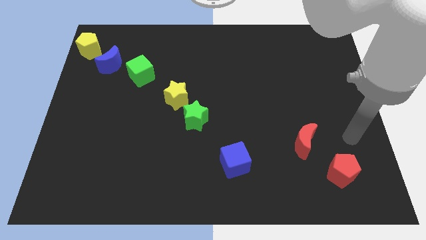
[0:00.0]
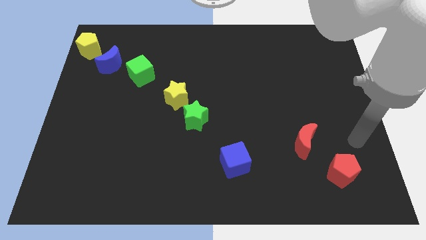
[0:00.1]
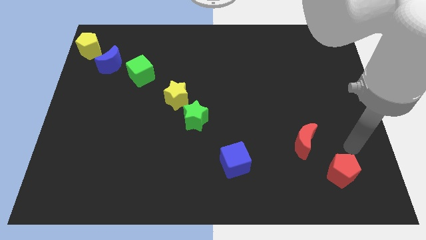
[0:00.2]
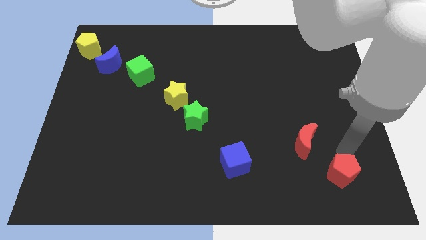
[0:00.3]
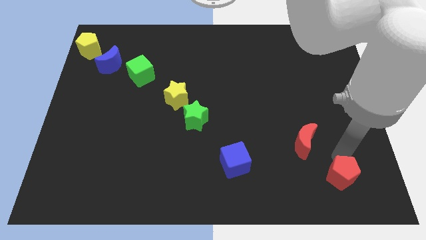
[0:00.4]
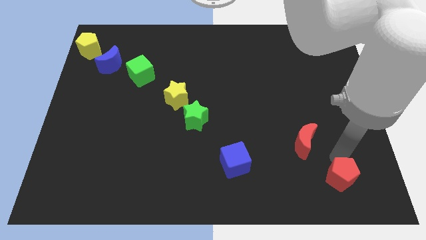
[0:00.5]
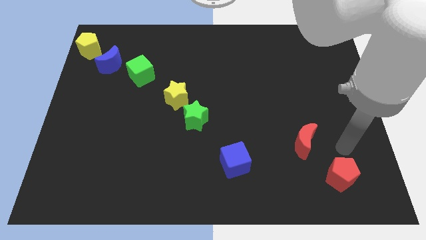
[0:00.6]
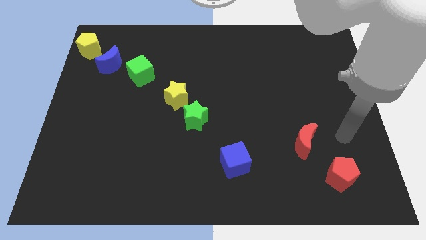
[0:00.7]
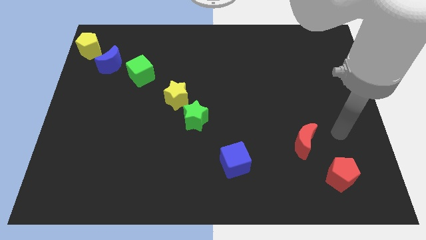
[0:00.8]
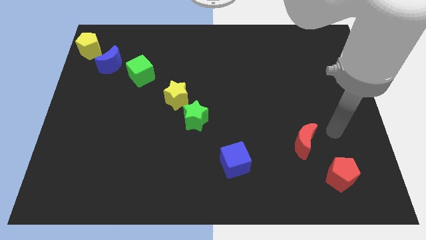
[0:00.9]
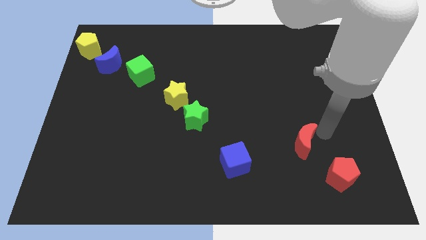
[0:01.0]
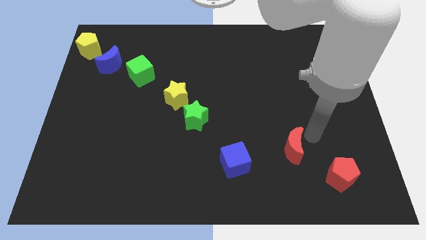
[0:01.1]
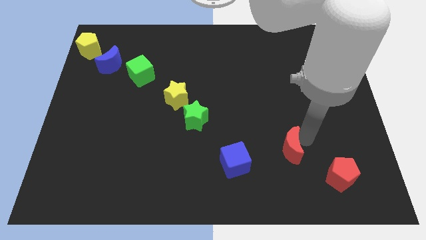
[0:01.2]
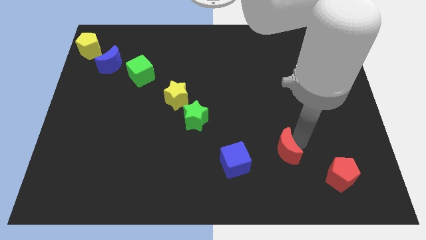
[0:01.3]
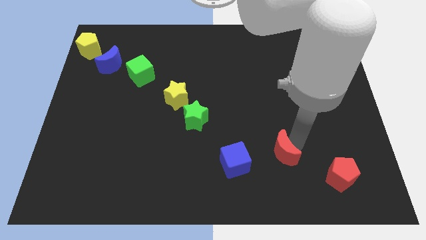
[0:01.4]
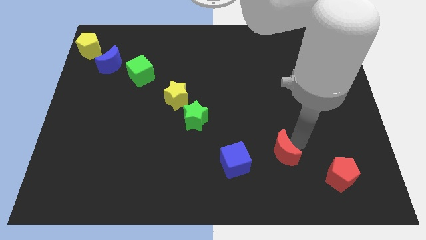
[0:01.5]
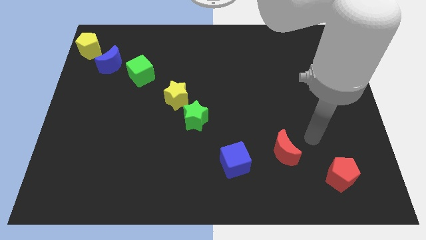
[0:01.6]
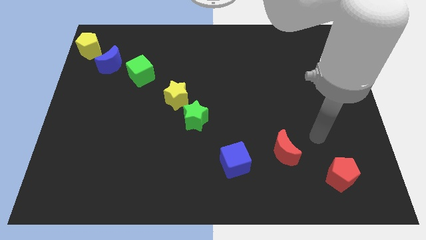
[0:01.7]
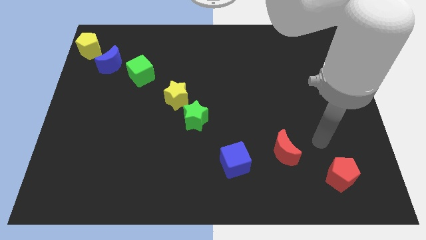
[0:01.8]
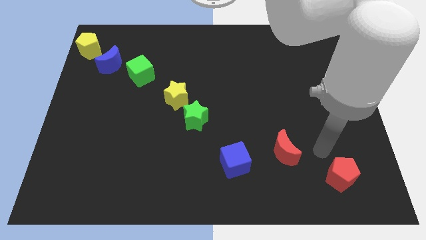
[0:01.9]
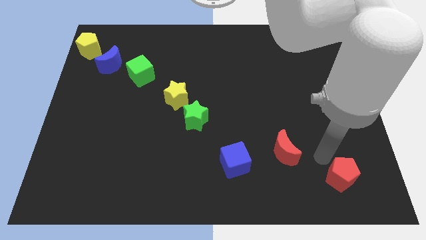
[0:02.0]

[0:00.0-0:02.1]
move the red moon right to the blue cube

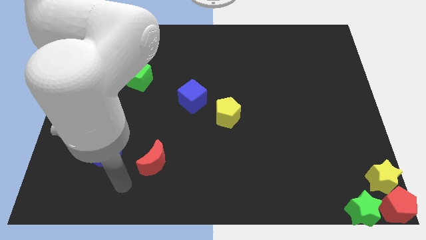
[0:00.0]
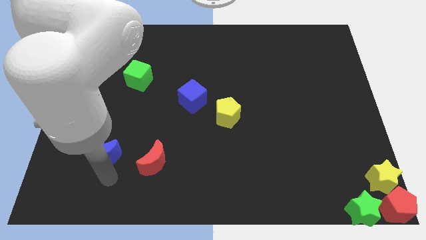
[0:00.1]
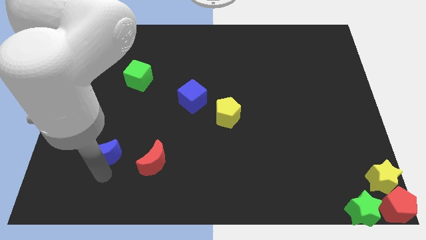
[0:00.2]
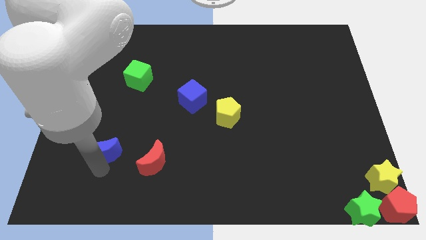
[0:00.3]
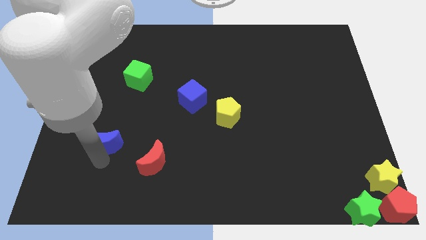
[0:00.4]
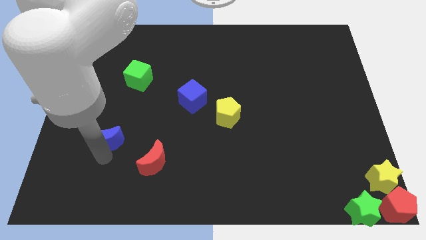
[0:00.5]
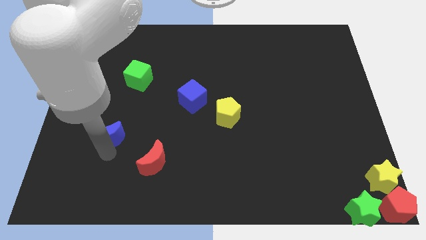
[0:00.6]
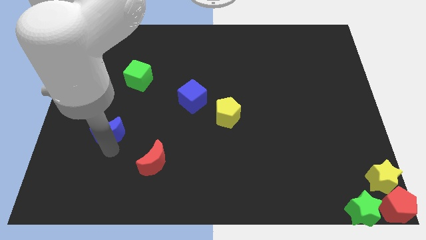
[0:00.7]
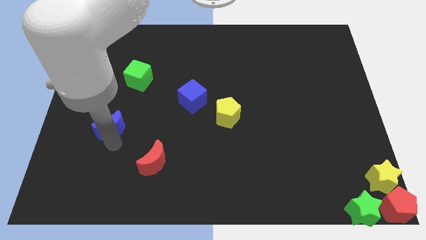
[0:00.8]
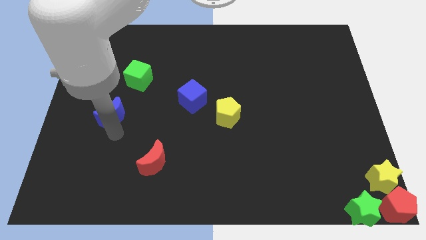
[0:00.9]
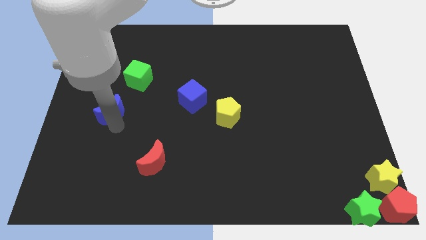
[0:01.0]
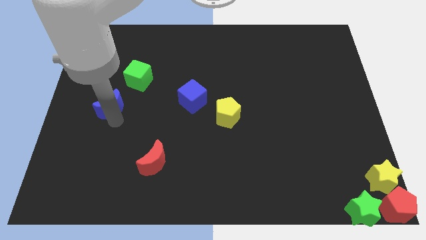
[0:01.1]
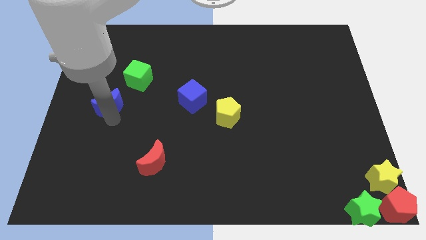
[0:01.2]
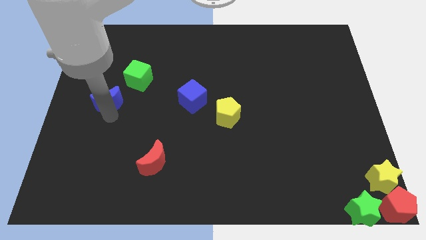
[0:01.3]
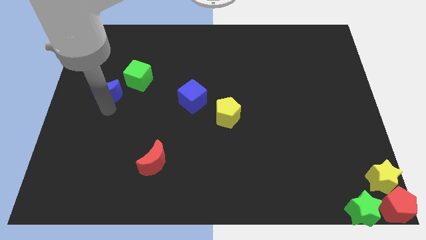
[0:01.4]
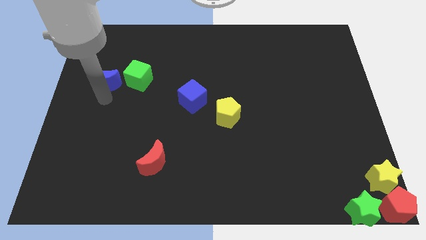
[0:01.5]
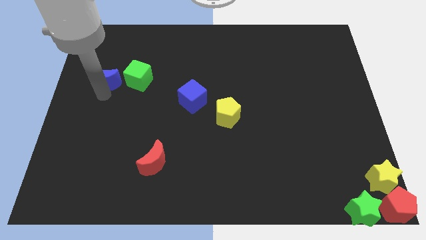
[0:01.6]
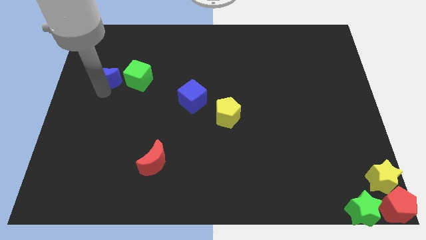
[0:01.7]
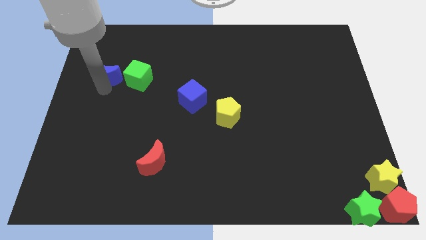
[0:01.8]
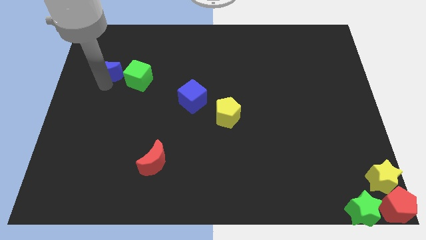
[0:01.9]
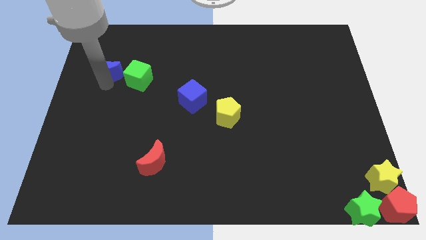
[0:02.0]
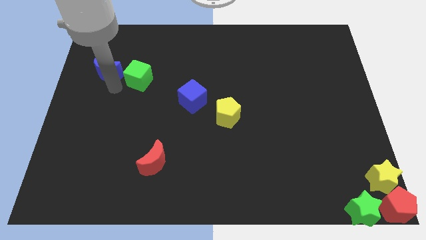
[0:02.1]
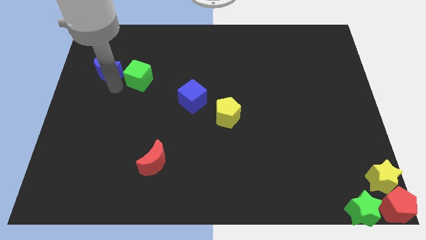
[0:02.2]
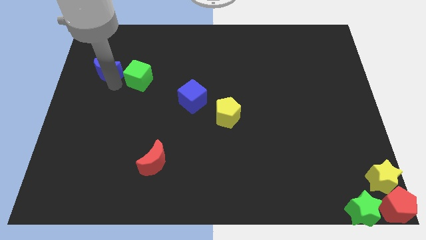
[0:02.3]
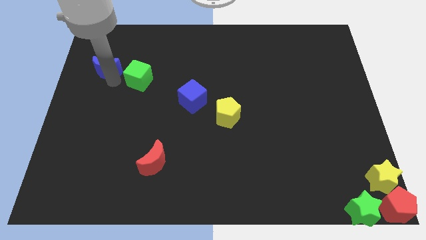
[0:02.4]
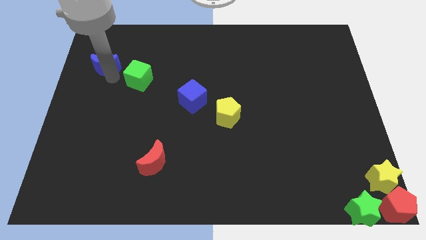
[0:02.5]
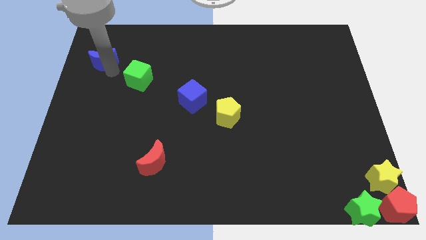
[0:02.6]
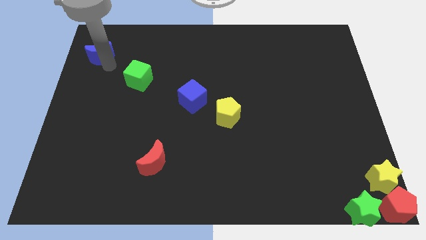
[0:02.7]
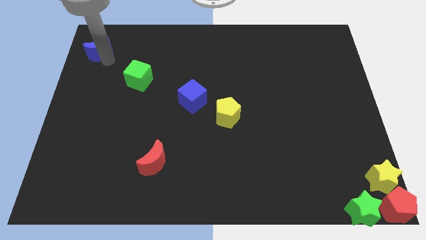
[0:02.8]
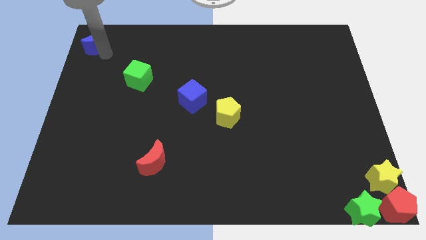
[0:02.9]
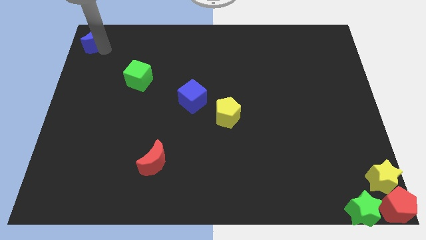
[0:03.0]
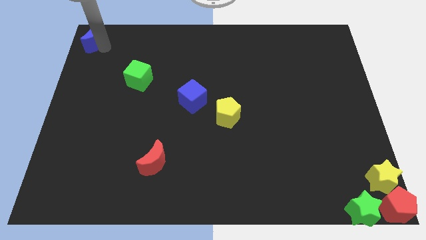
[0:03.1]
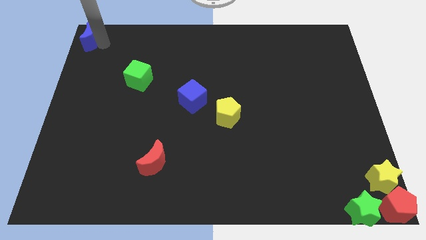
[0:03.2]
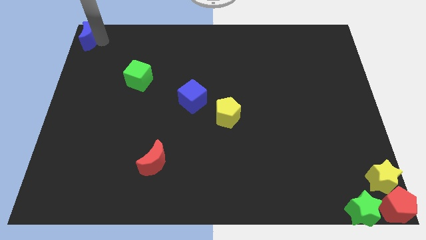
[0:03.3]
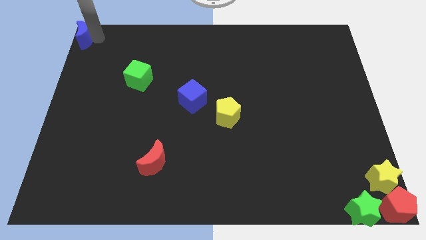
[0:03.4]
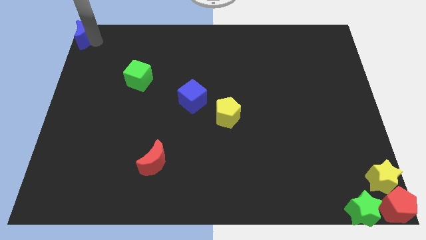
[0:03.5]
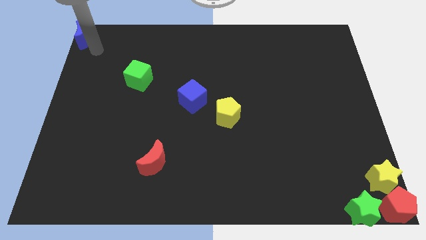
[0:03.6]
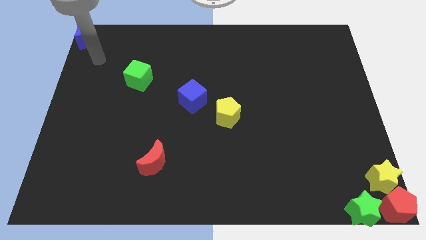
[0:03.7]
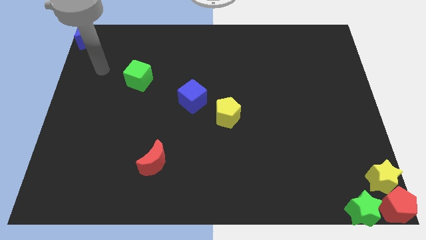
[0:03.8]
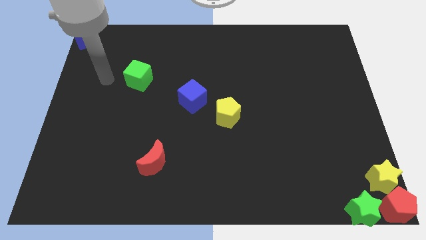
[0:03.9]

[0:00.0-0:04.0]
place the blue moon in the top left

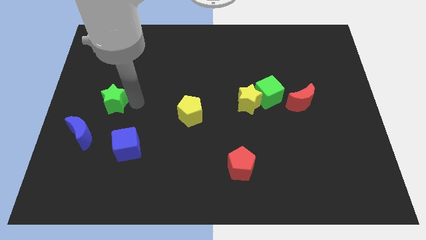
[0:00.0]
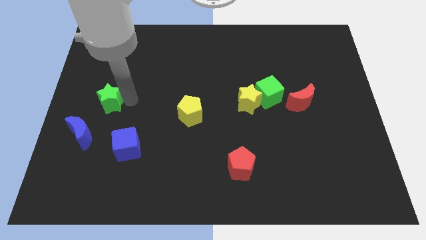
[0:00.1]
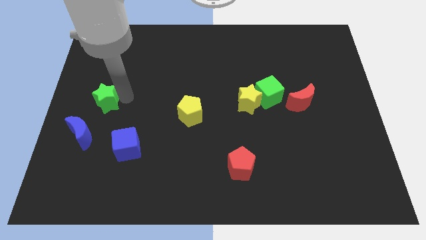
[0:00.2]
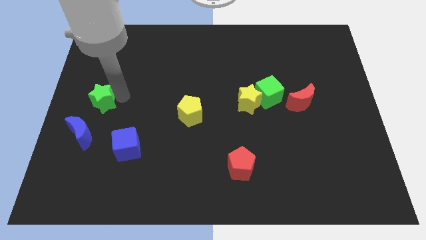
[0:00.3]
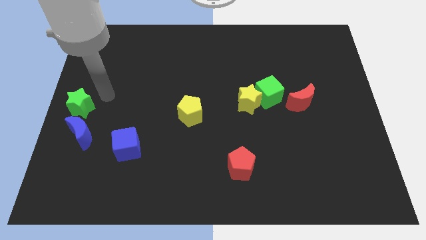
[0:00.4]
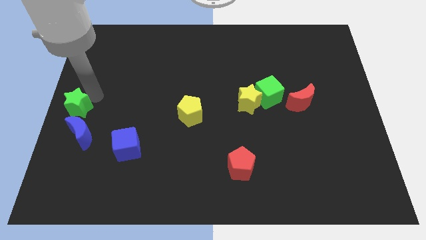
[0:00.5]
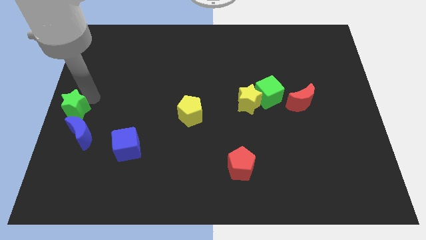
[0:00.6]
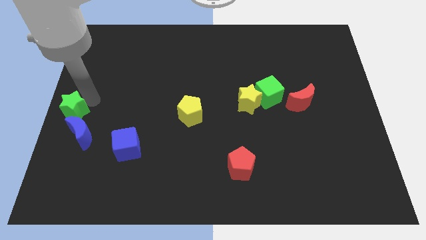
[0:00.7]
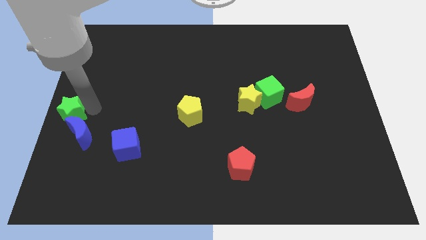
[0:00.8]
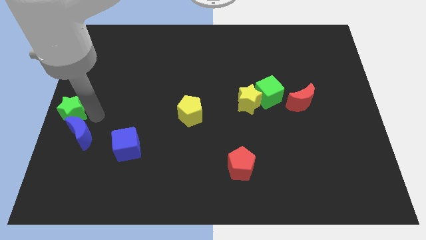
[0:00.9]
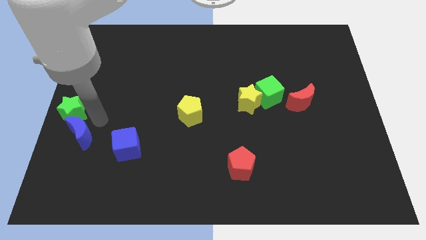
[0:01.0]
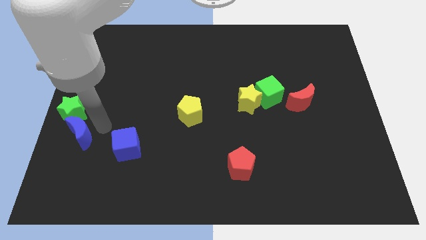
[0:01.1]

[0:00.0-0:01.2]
move the green star above the blue moon

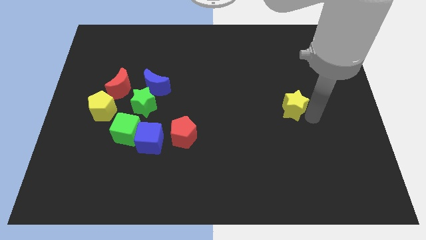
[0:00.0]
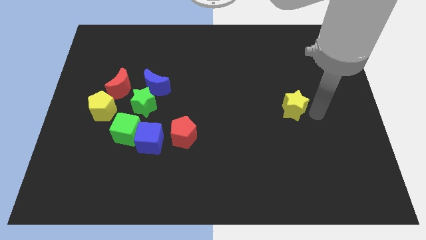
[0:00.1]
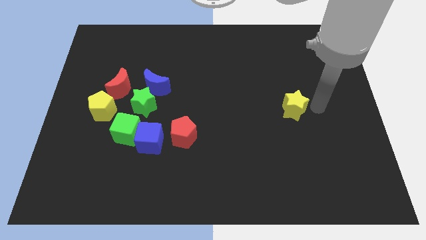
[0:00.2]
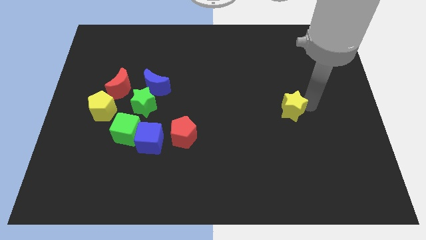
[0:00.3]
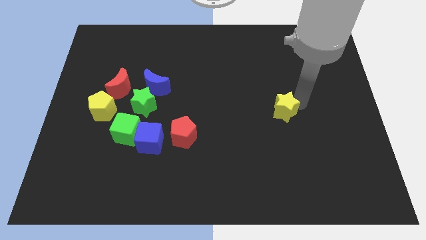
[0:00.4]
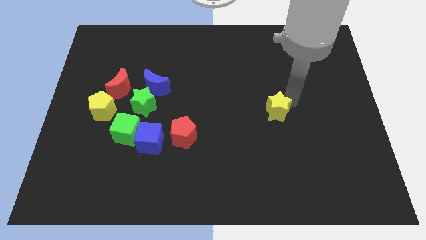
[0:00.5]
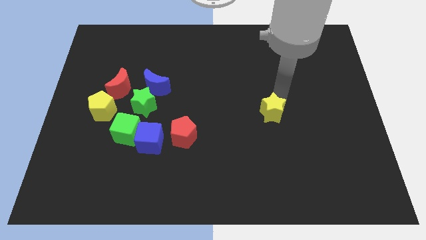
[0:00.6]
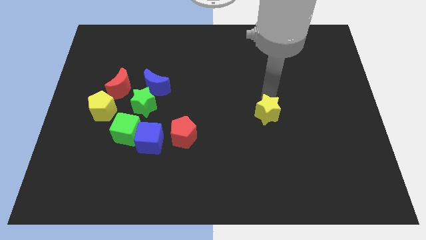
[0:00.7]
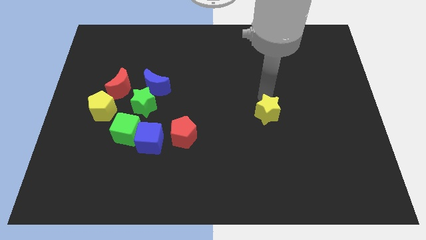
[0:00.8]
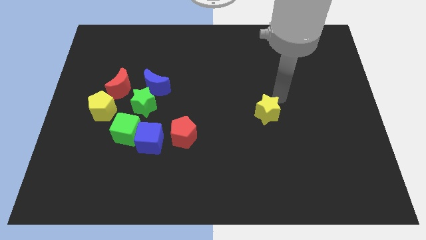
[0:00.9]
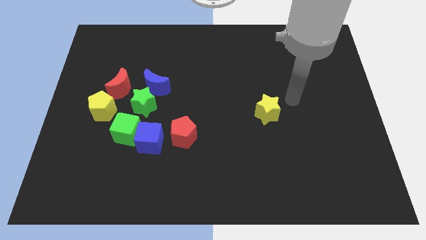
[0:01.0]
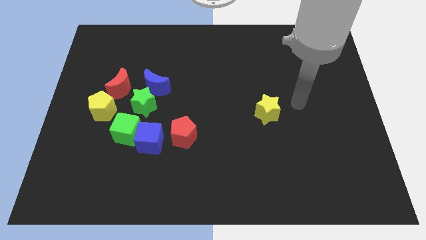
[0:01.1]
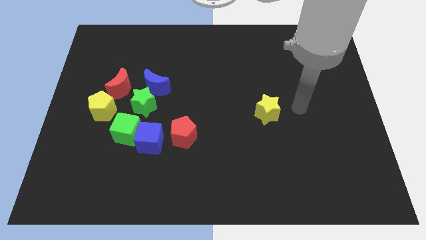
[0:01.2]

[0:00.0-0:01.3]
put the yellow star parallel to the green star

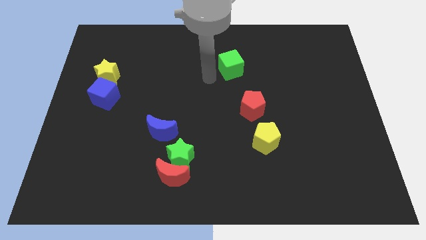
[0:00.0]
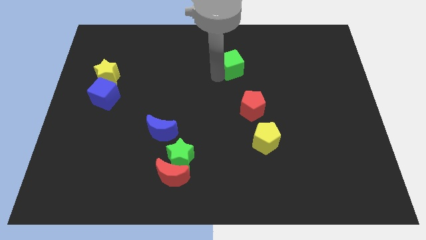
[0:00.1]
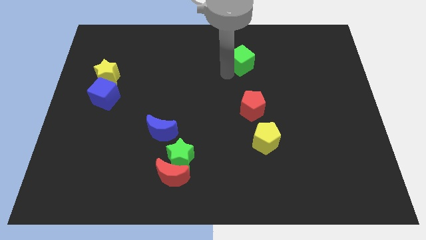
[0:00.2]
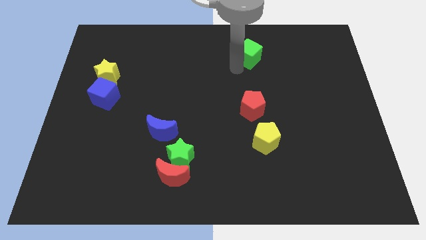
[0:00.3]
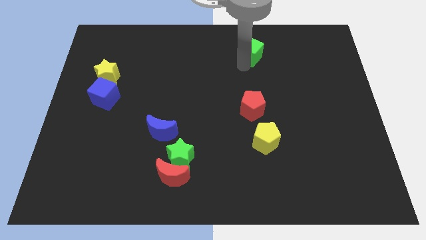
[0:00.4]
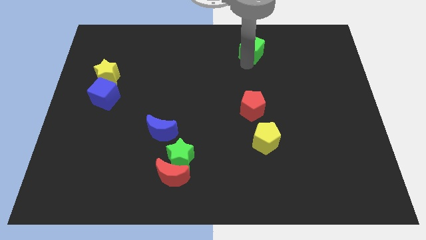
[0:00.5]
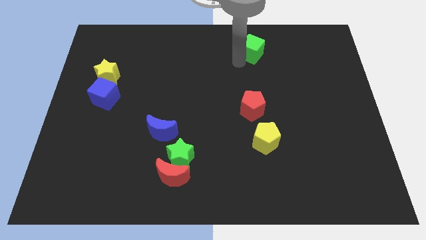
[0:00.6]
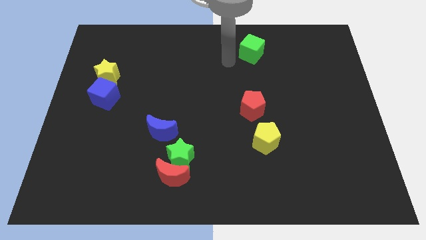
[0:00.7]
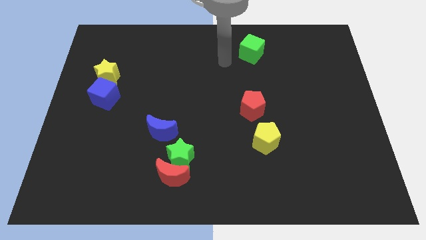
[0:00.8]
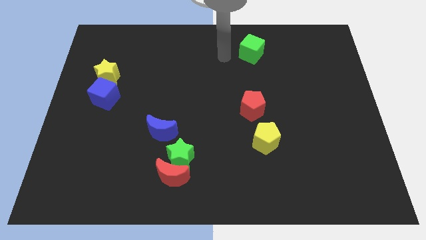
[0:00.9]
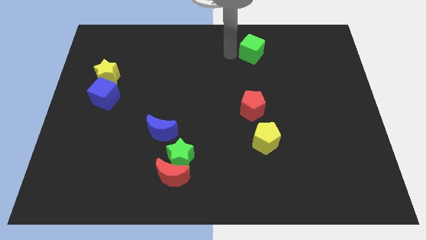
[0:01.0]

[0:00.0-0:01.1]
move the green cube to the vertical top of the red pentagon
